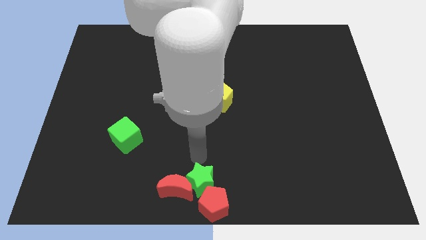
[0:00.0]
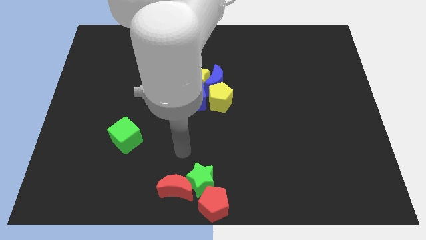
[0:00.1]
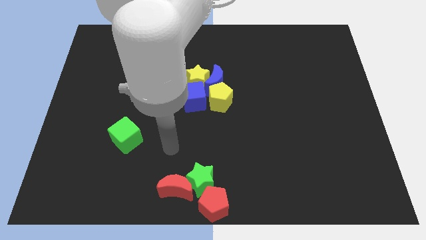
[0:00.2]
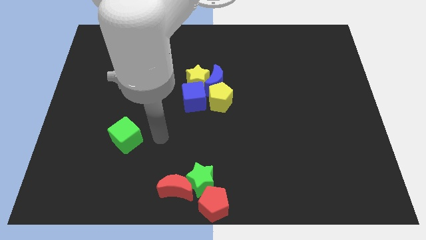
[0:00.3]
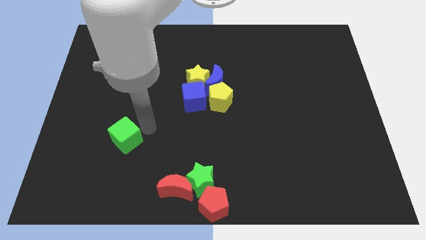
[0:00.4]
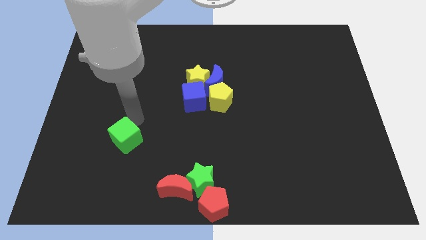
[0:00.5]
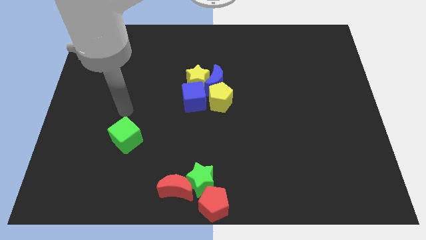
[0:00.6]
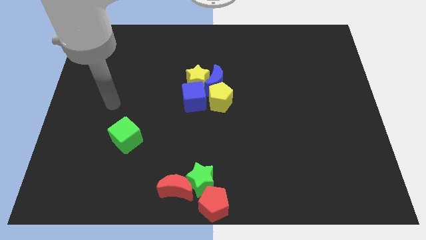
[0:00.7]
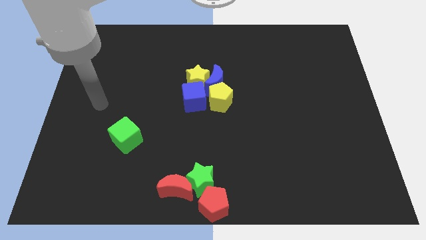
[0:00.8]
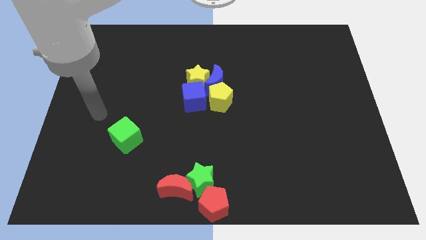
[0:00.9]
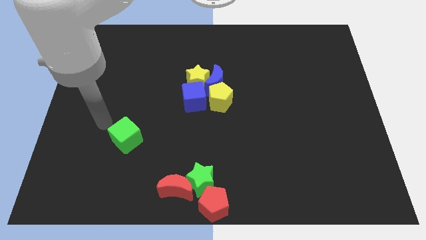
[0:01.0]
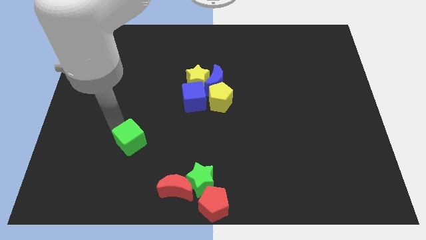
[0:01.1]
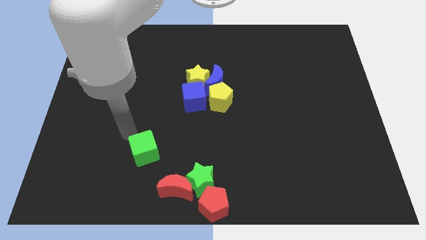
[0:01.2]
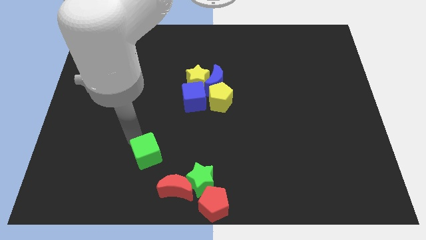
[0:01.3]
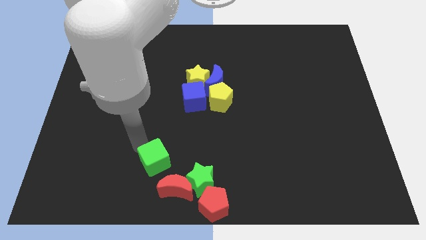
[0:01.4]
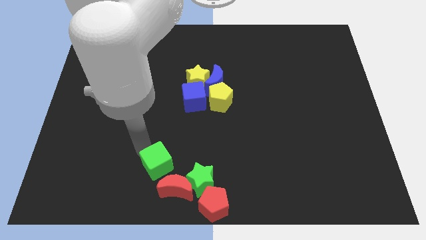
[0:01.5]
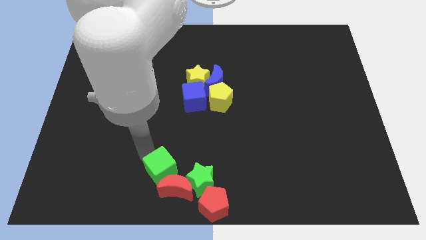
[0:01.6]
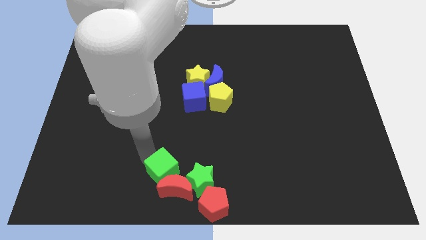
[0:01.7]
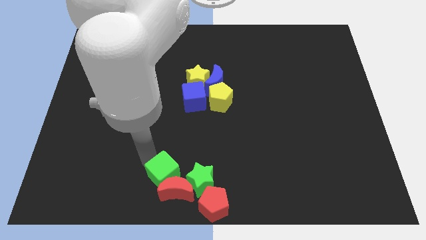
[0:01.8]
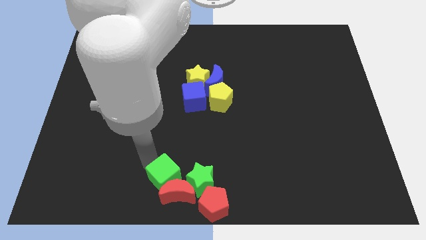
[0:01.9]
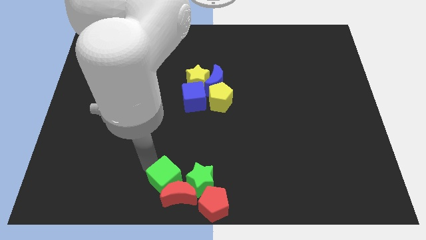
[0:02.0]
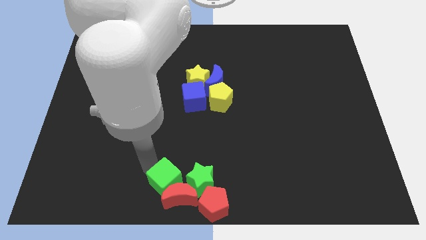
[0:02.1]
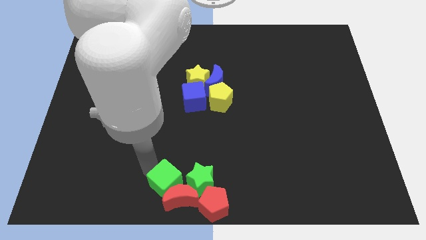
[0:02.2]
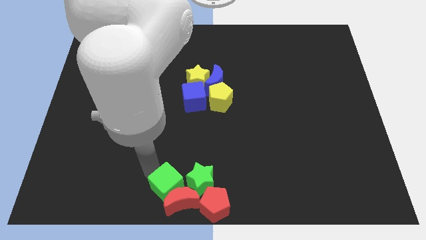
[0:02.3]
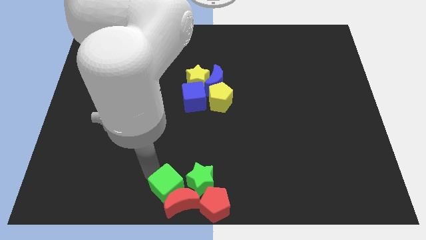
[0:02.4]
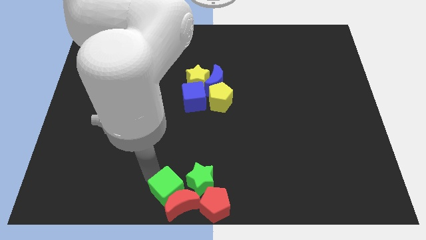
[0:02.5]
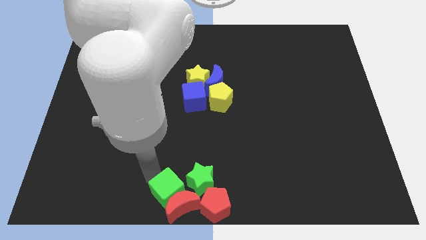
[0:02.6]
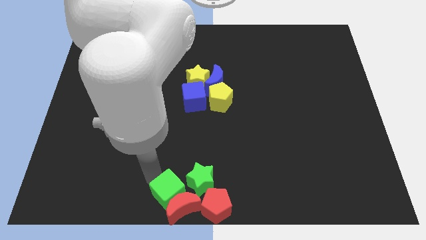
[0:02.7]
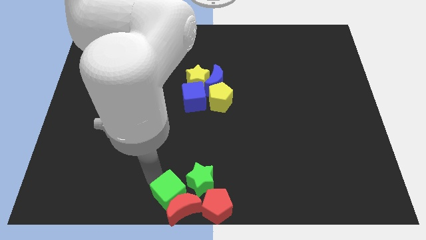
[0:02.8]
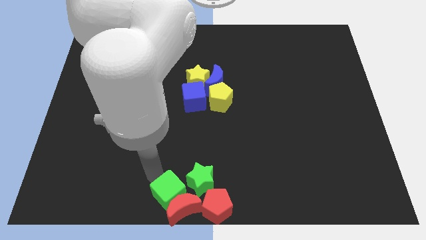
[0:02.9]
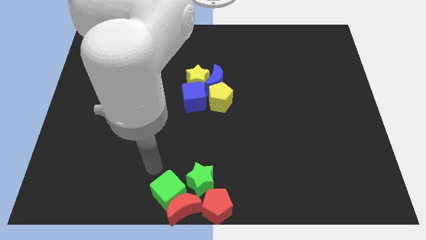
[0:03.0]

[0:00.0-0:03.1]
push the green cube above the red moon

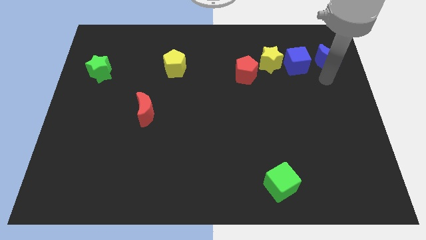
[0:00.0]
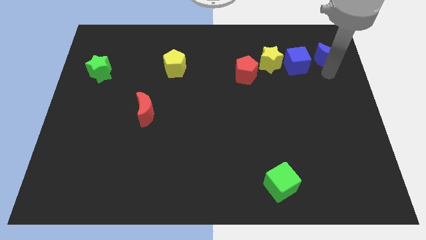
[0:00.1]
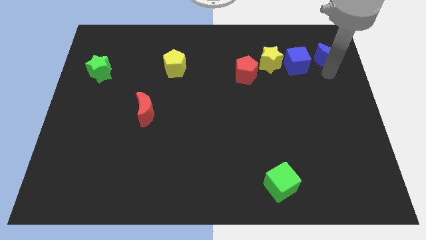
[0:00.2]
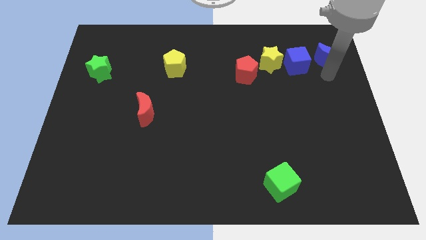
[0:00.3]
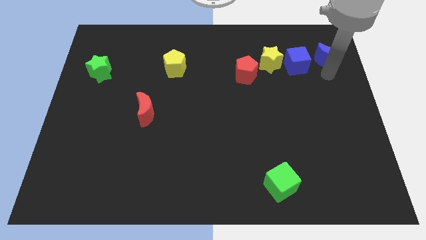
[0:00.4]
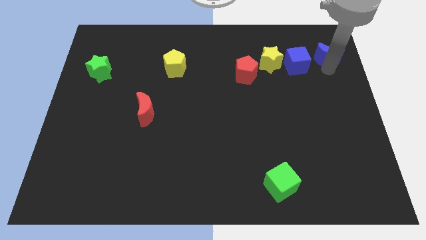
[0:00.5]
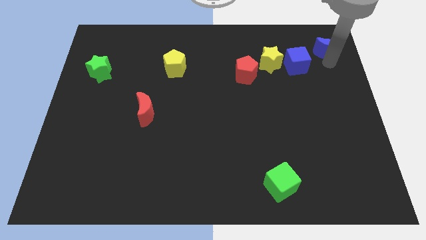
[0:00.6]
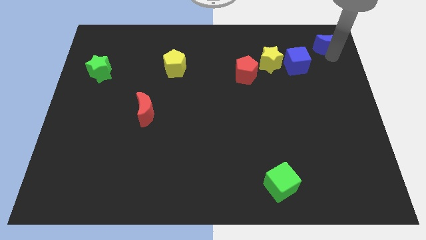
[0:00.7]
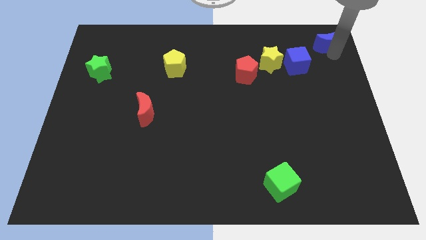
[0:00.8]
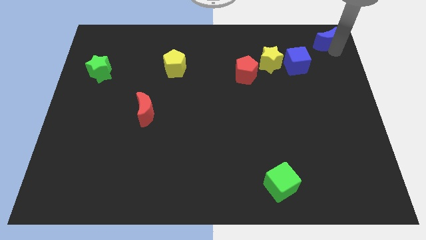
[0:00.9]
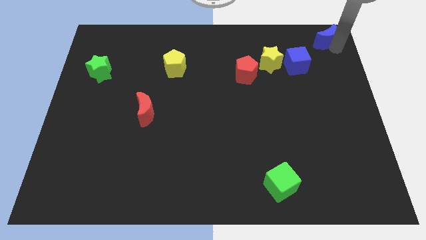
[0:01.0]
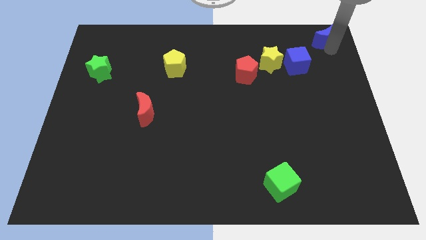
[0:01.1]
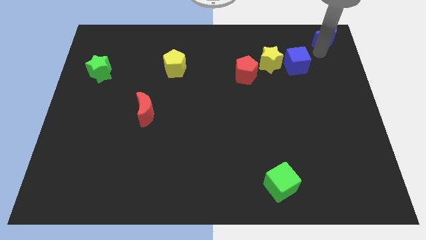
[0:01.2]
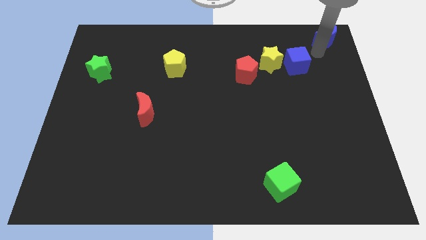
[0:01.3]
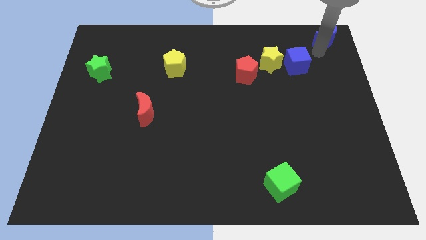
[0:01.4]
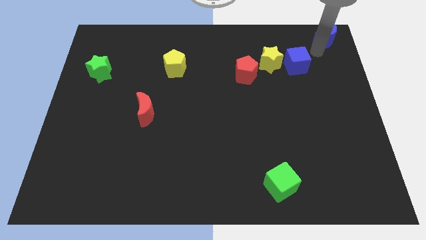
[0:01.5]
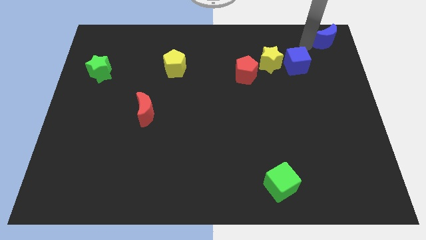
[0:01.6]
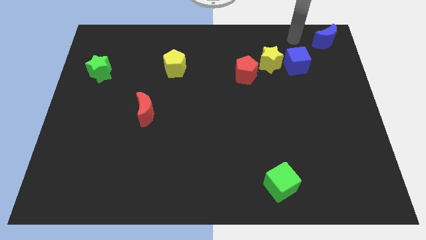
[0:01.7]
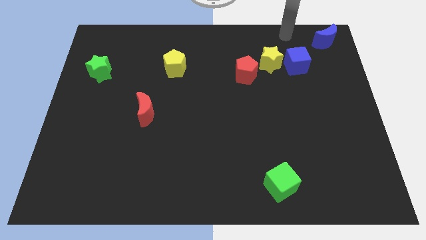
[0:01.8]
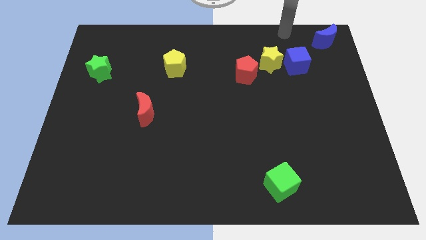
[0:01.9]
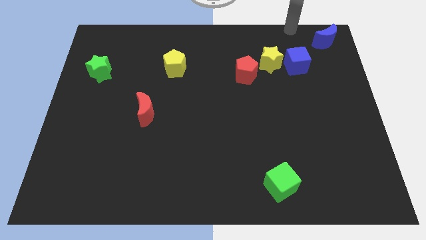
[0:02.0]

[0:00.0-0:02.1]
slide blue moon to the top right corner

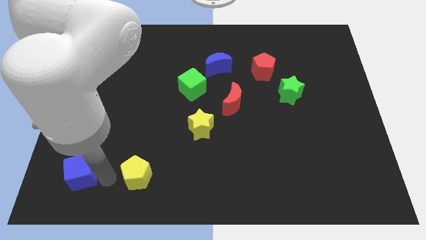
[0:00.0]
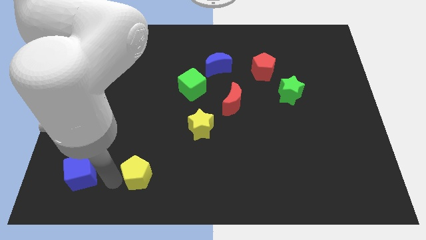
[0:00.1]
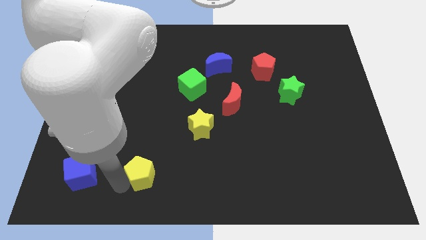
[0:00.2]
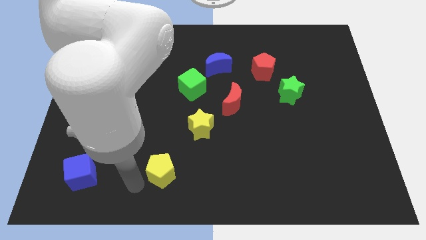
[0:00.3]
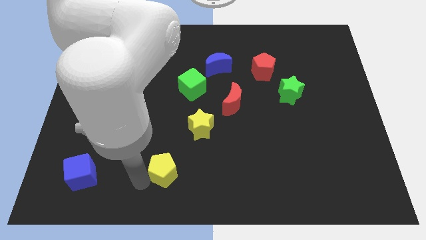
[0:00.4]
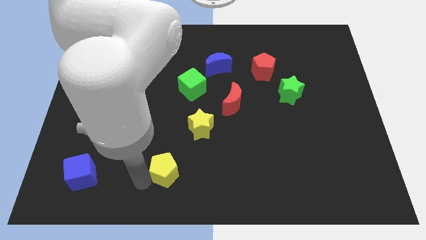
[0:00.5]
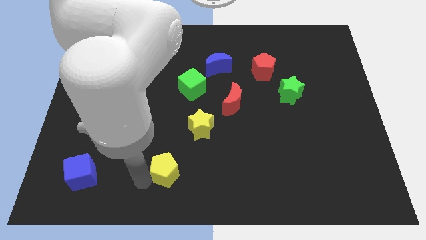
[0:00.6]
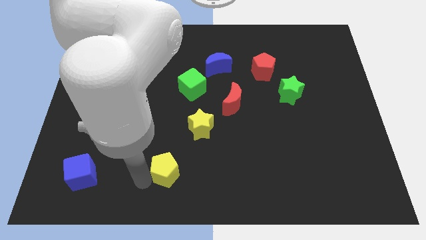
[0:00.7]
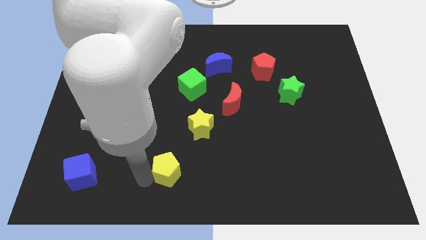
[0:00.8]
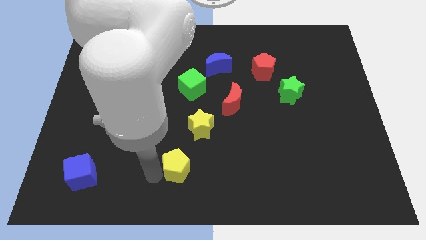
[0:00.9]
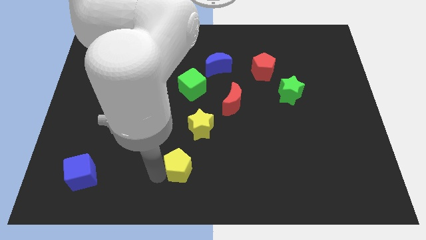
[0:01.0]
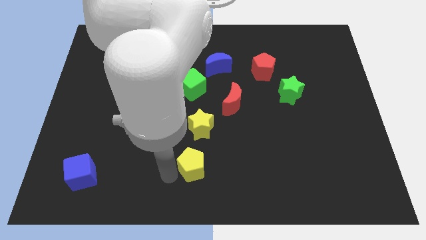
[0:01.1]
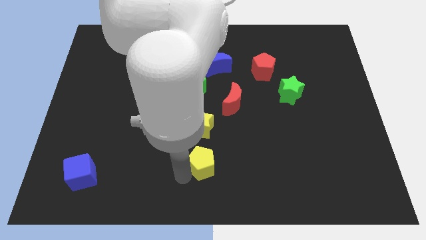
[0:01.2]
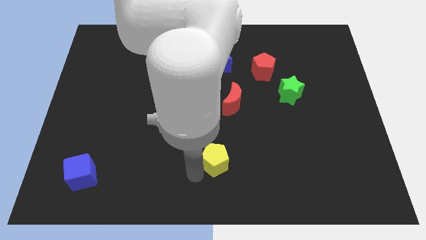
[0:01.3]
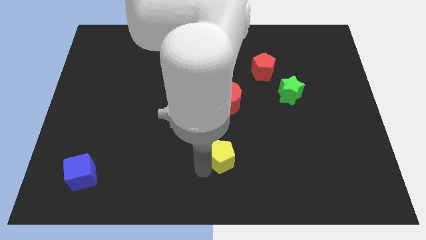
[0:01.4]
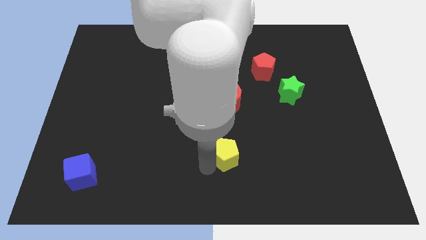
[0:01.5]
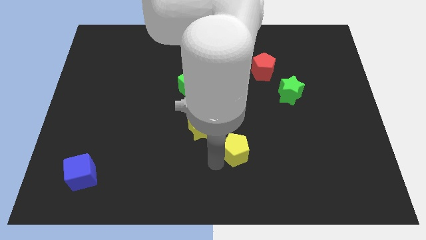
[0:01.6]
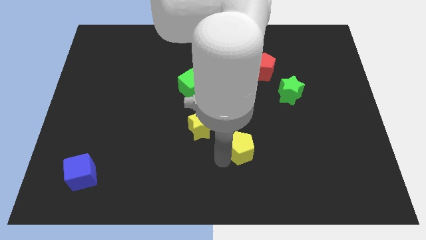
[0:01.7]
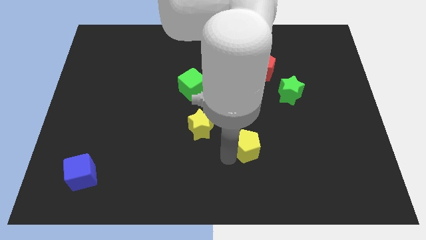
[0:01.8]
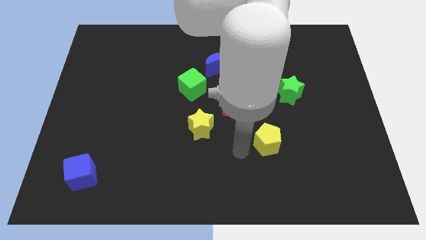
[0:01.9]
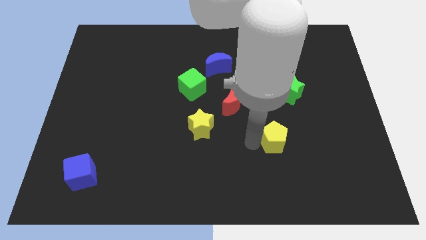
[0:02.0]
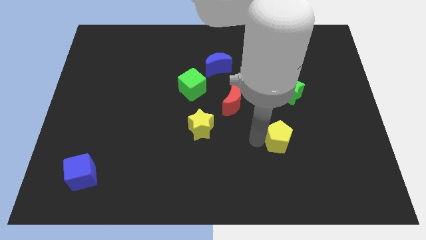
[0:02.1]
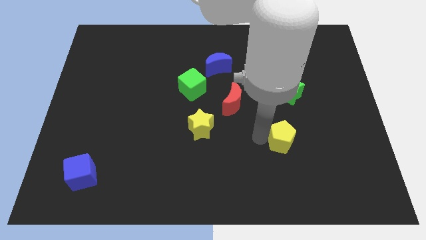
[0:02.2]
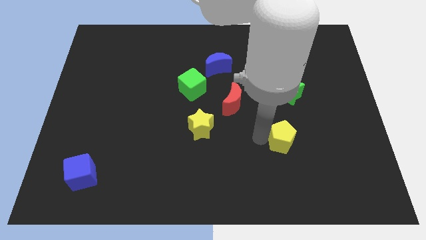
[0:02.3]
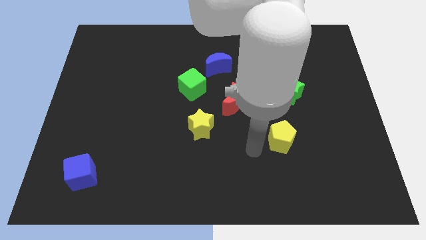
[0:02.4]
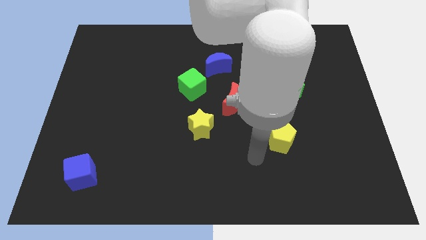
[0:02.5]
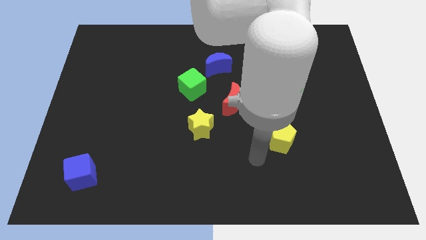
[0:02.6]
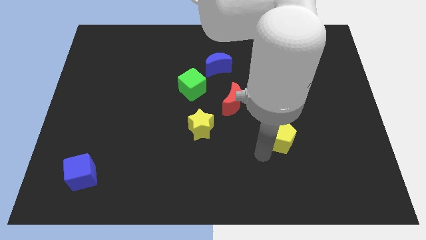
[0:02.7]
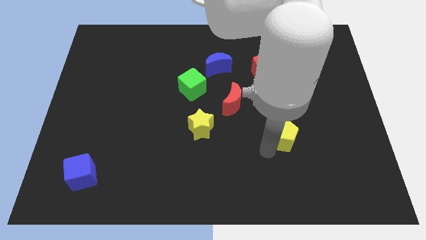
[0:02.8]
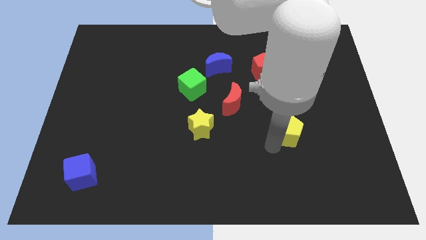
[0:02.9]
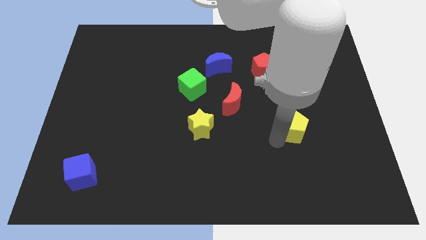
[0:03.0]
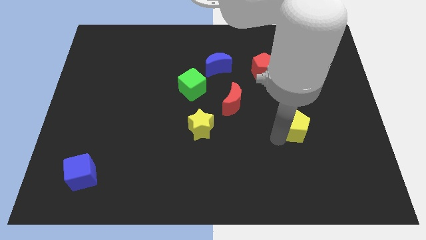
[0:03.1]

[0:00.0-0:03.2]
place yellow pentagon to the right of yellow star

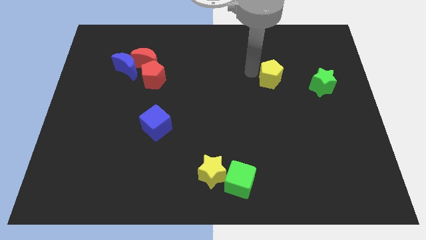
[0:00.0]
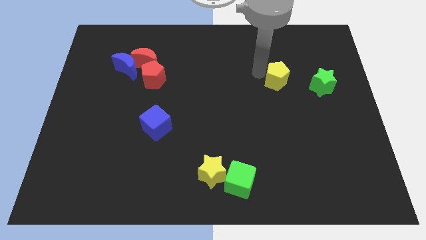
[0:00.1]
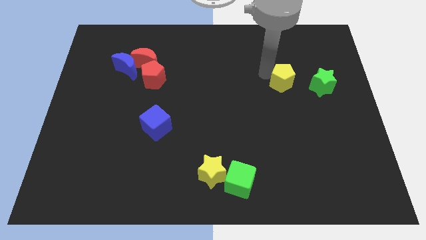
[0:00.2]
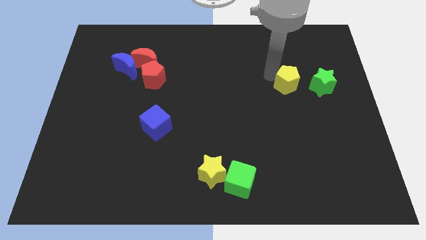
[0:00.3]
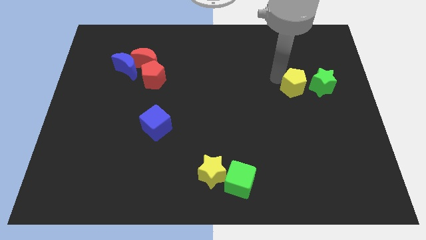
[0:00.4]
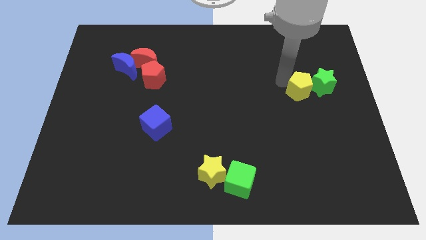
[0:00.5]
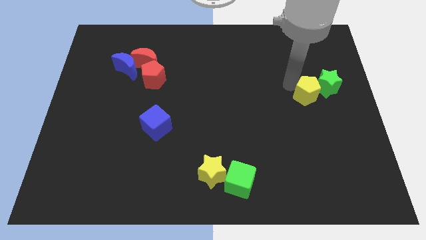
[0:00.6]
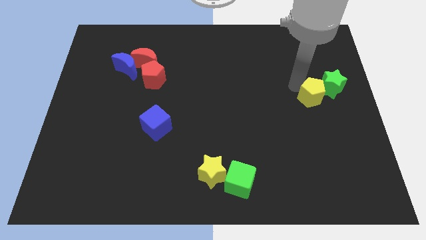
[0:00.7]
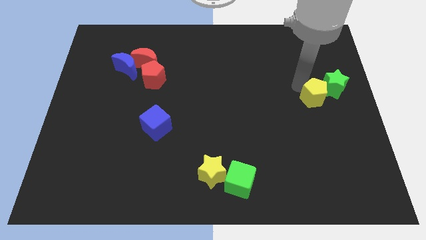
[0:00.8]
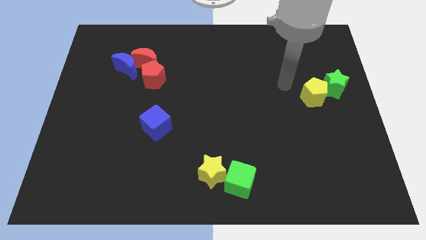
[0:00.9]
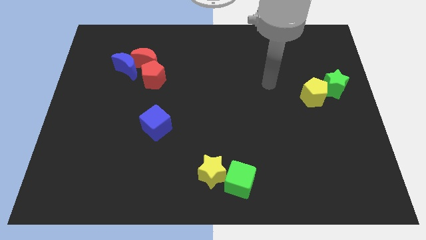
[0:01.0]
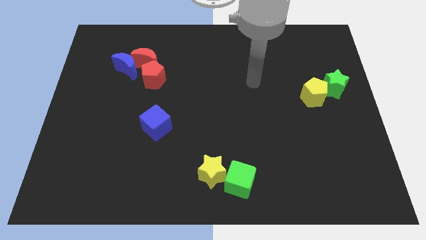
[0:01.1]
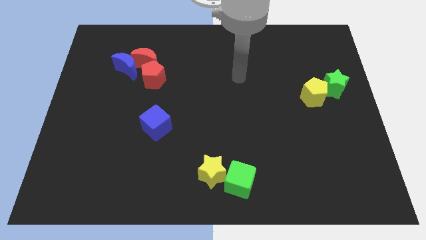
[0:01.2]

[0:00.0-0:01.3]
place yellow pentagon near green star
